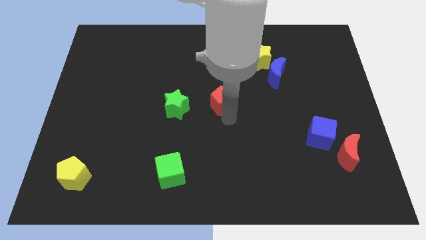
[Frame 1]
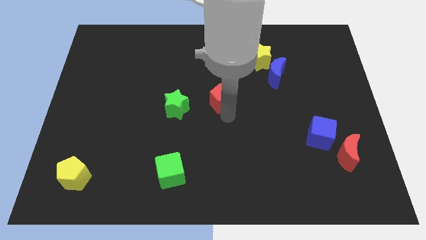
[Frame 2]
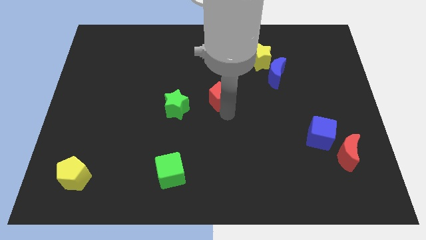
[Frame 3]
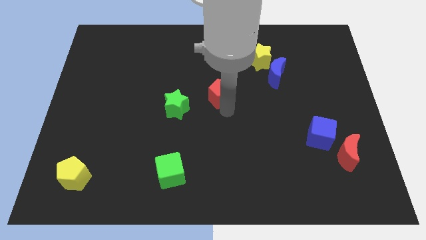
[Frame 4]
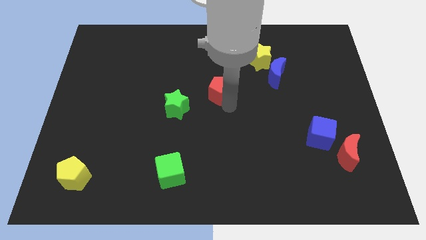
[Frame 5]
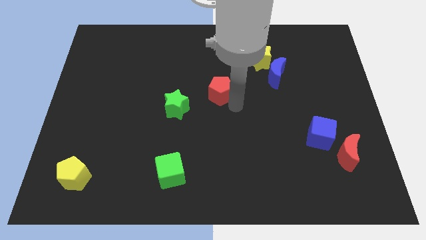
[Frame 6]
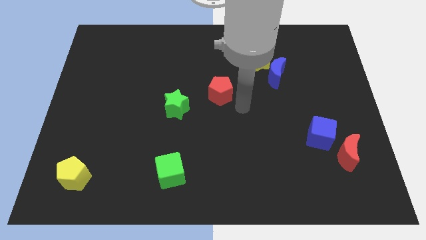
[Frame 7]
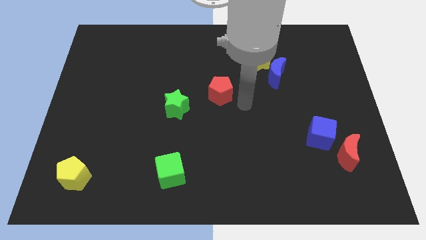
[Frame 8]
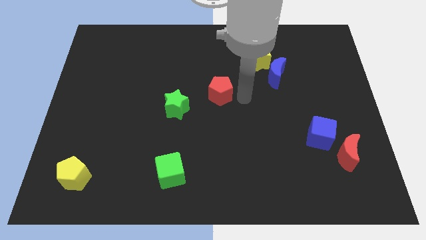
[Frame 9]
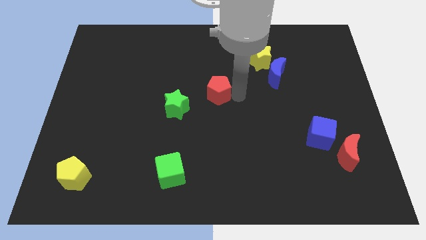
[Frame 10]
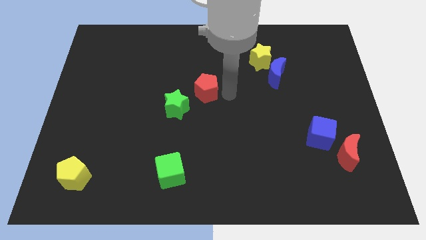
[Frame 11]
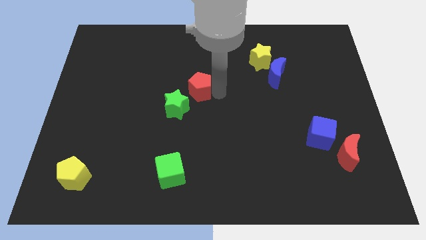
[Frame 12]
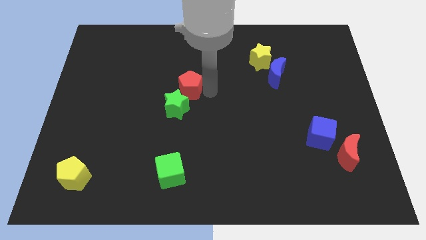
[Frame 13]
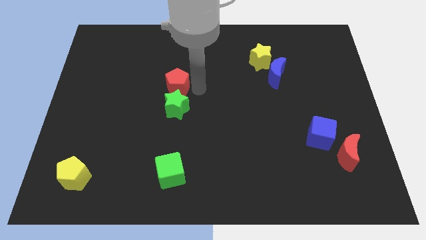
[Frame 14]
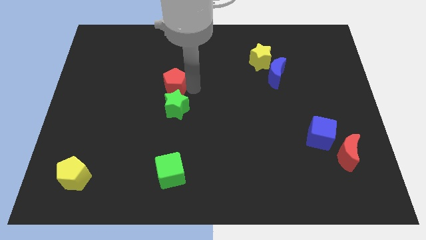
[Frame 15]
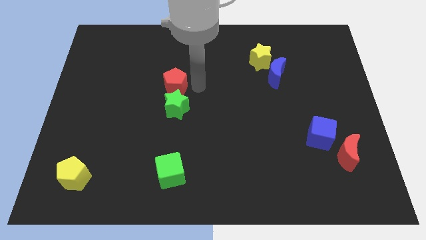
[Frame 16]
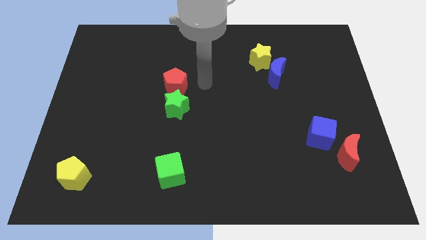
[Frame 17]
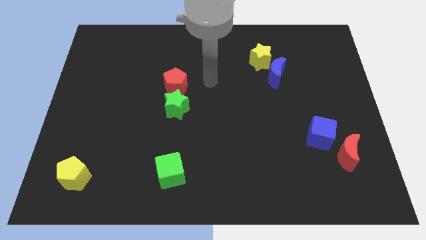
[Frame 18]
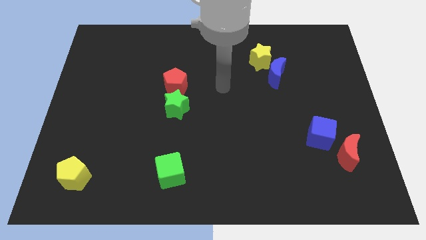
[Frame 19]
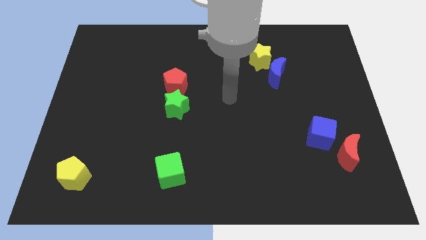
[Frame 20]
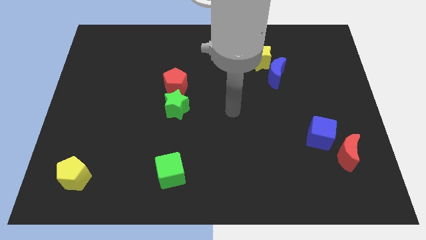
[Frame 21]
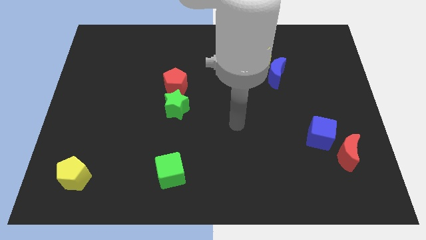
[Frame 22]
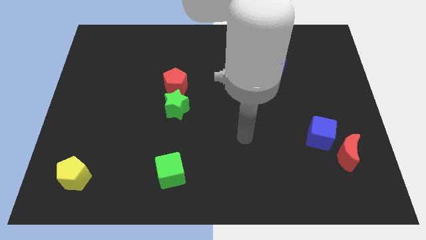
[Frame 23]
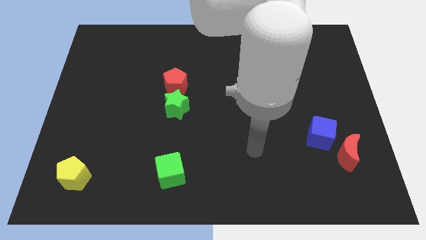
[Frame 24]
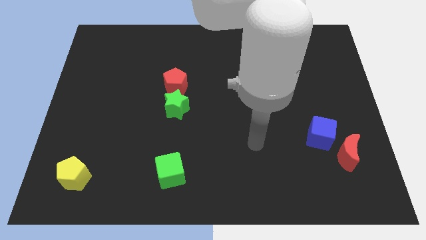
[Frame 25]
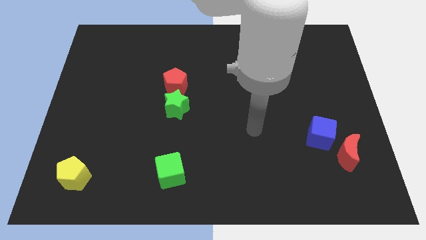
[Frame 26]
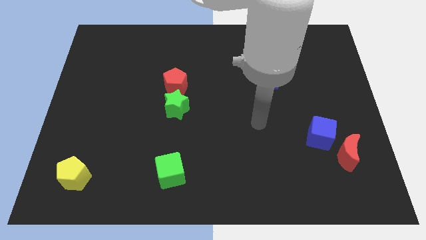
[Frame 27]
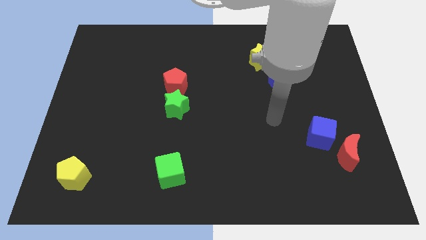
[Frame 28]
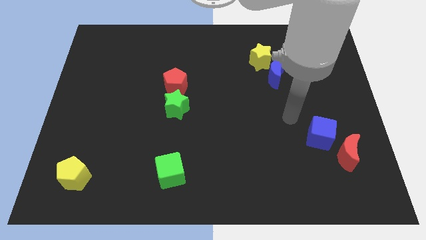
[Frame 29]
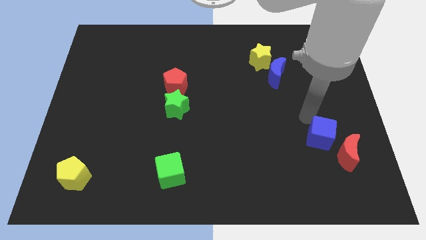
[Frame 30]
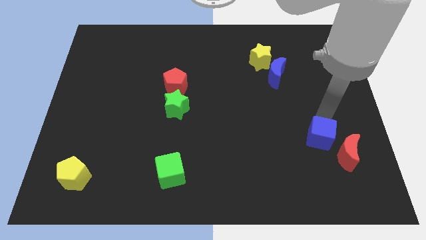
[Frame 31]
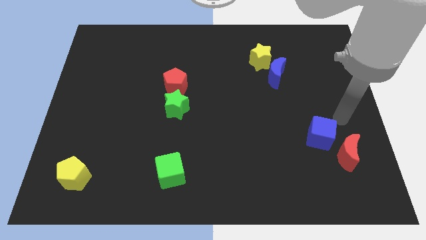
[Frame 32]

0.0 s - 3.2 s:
place the red pentagon on top of the green star

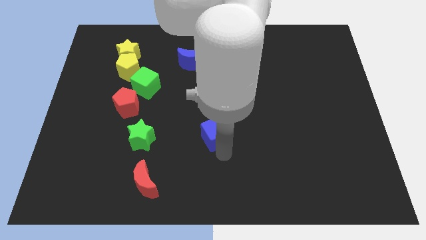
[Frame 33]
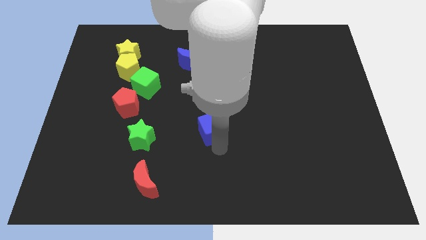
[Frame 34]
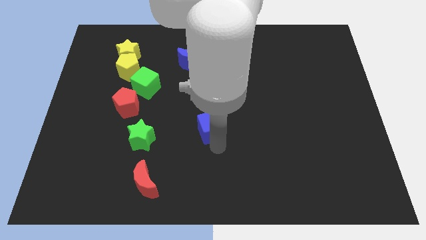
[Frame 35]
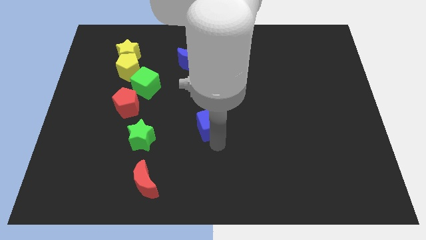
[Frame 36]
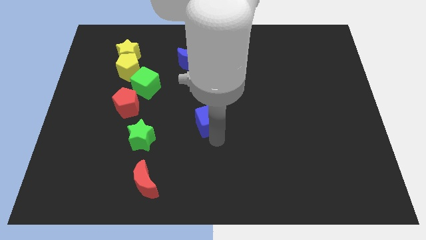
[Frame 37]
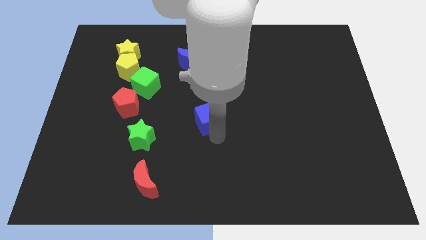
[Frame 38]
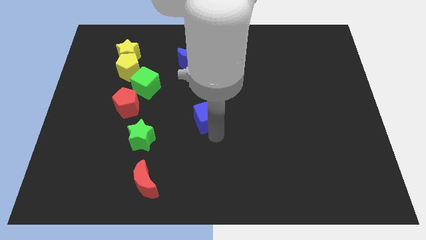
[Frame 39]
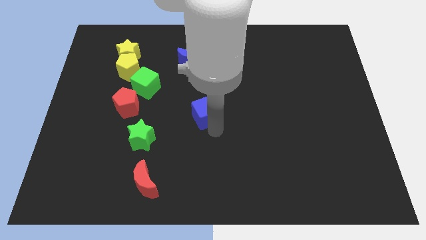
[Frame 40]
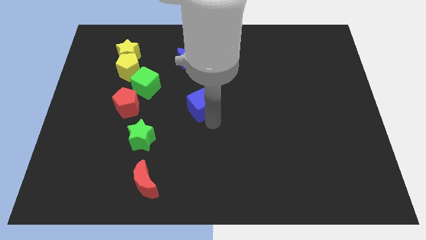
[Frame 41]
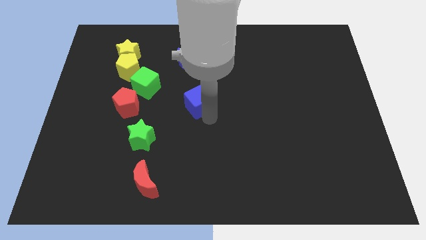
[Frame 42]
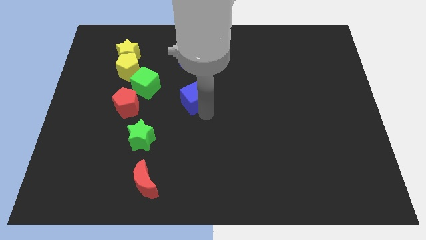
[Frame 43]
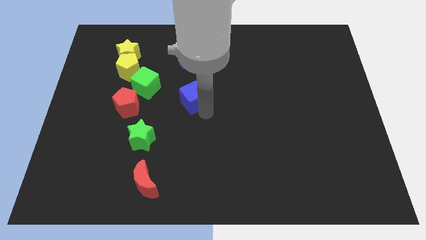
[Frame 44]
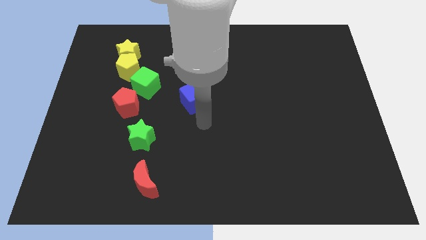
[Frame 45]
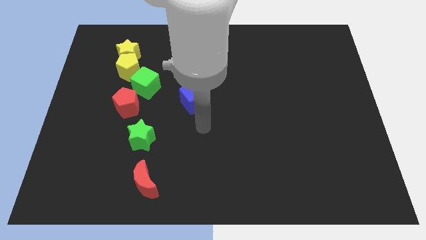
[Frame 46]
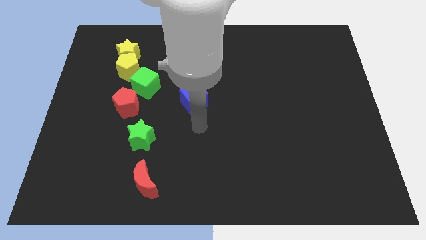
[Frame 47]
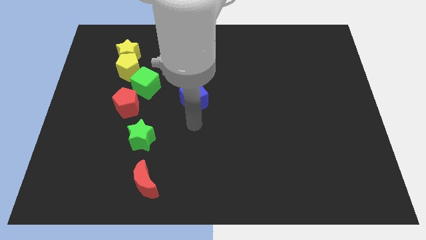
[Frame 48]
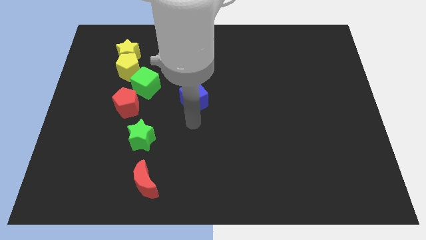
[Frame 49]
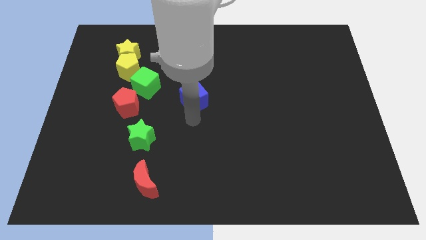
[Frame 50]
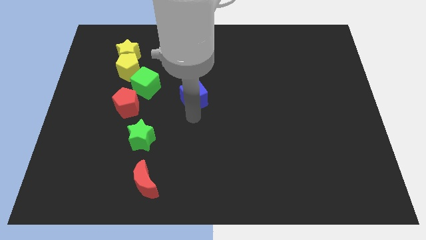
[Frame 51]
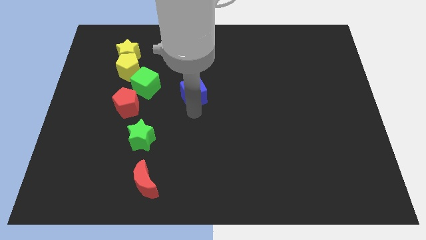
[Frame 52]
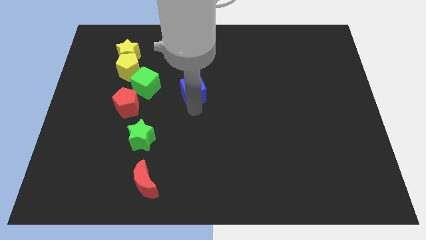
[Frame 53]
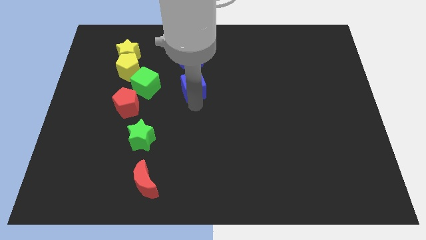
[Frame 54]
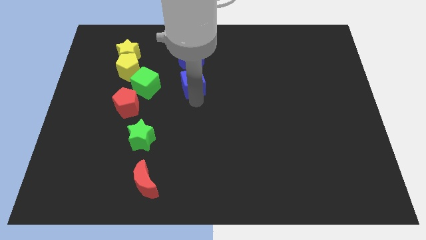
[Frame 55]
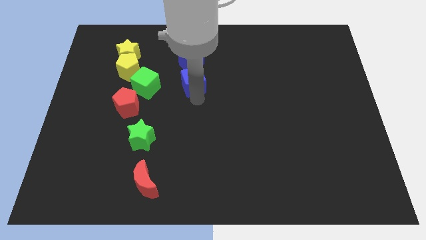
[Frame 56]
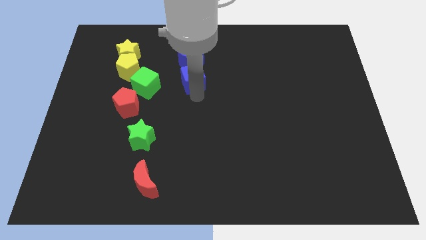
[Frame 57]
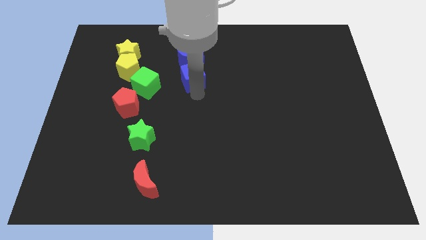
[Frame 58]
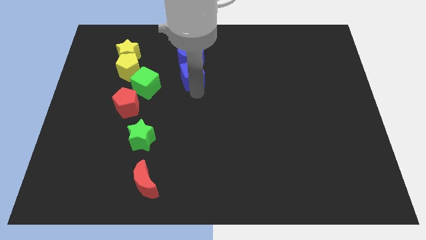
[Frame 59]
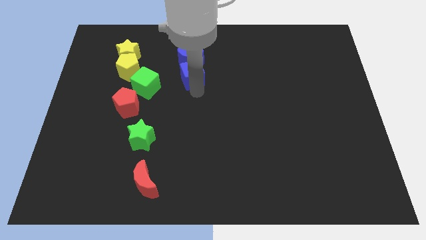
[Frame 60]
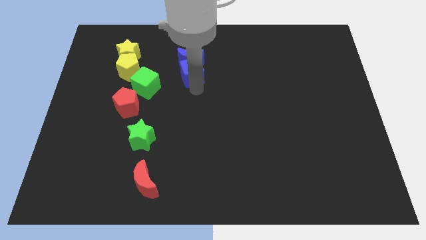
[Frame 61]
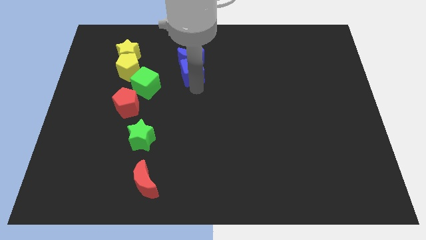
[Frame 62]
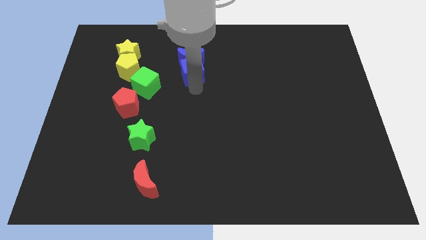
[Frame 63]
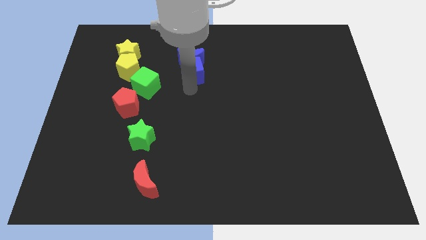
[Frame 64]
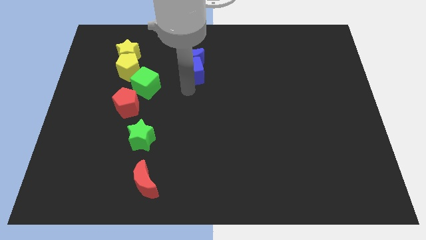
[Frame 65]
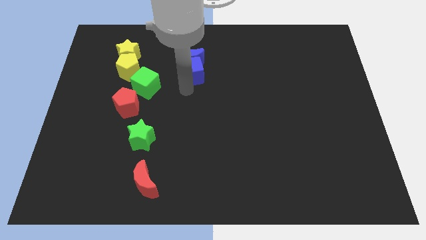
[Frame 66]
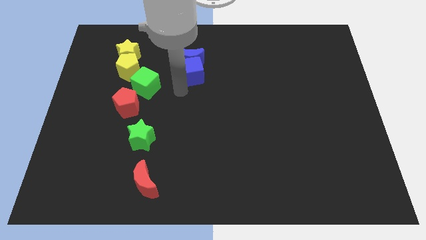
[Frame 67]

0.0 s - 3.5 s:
move the blue cube into the blue crescent

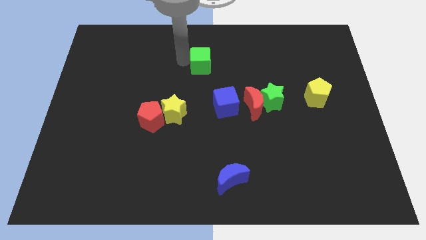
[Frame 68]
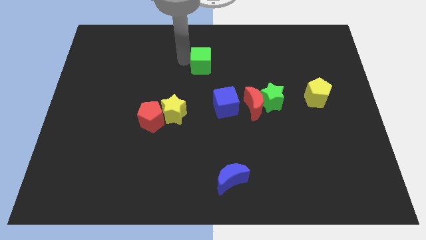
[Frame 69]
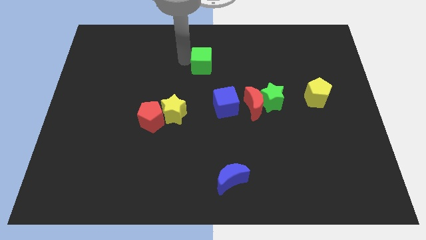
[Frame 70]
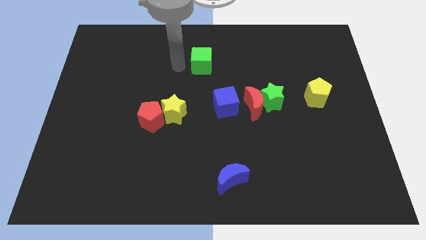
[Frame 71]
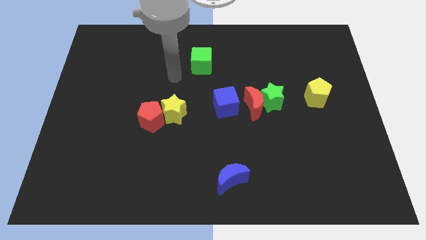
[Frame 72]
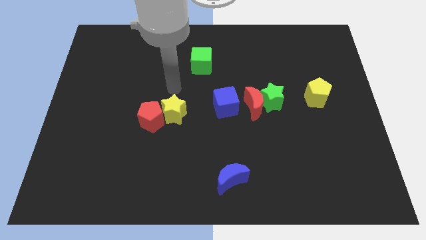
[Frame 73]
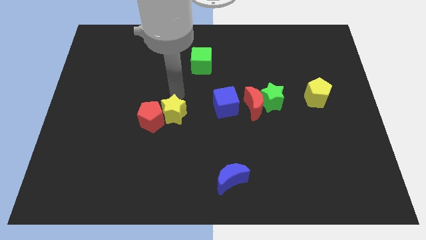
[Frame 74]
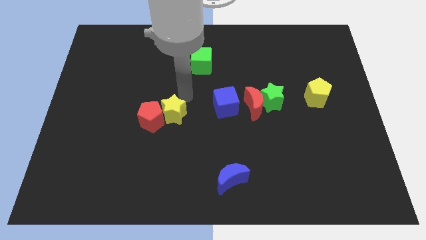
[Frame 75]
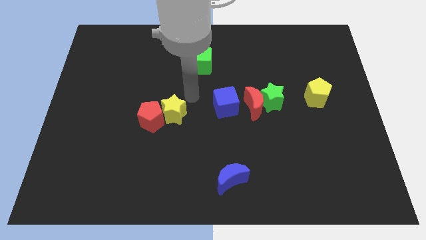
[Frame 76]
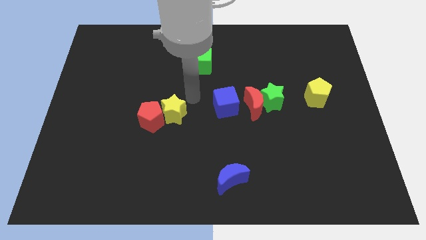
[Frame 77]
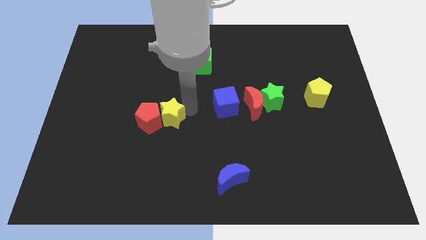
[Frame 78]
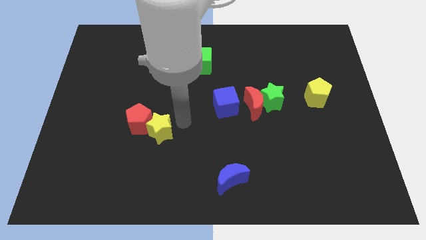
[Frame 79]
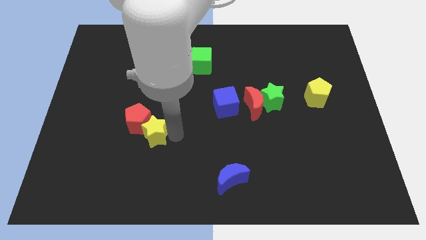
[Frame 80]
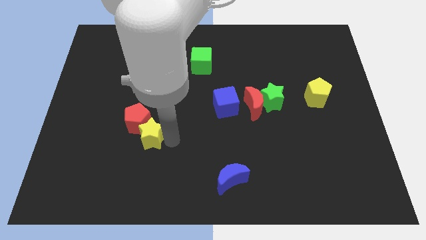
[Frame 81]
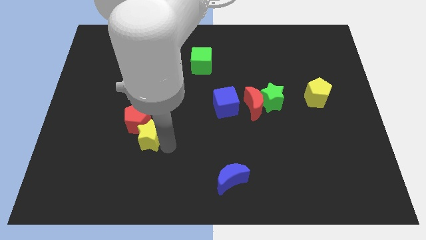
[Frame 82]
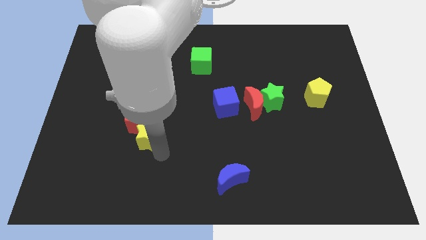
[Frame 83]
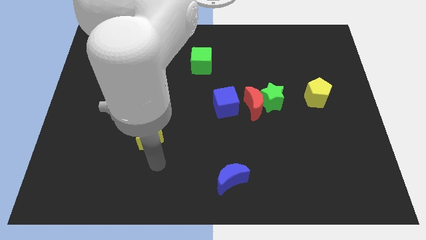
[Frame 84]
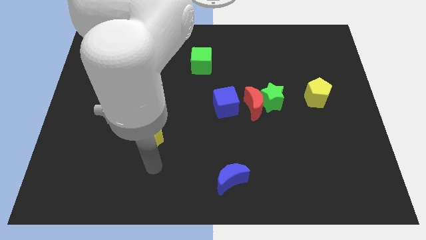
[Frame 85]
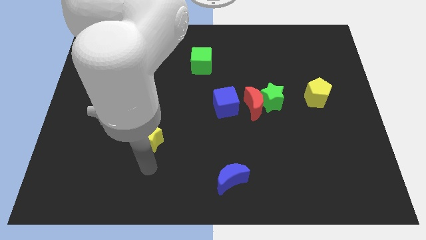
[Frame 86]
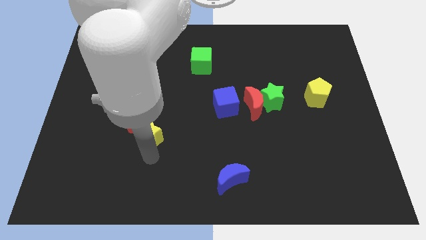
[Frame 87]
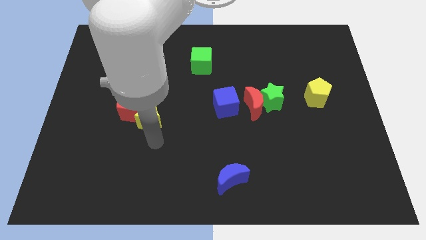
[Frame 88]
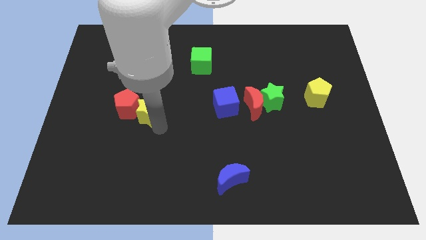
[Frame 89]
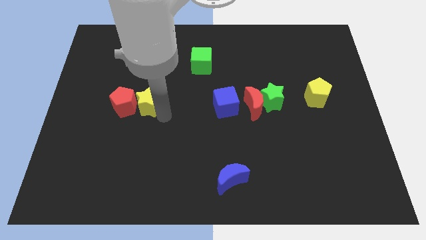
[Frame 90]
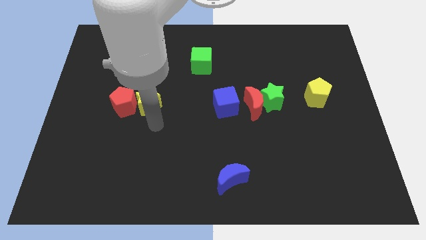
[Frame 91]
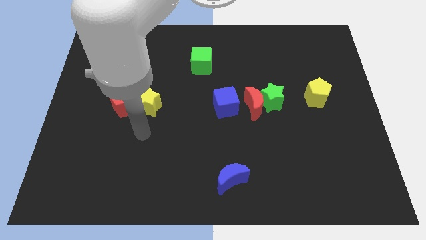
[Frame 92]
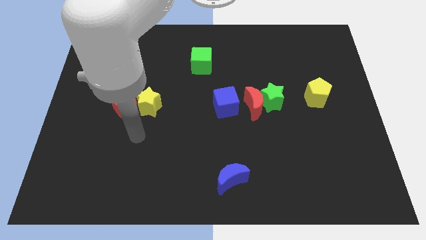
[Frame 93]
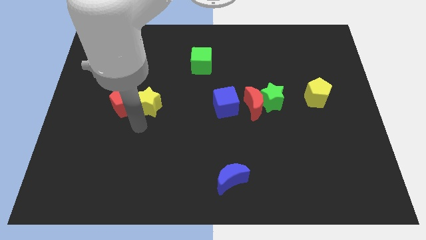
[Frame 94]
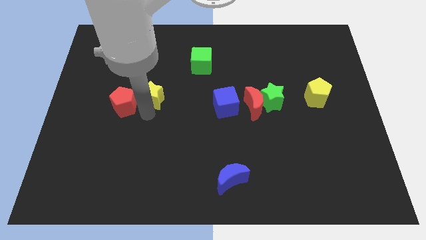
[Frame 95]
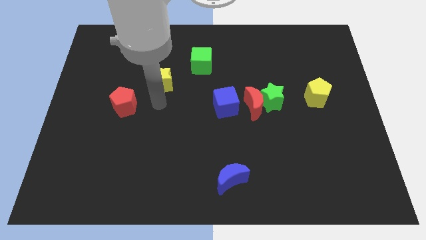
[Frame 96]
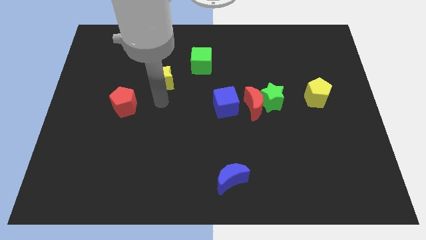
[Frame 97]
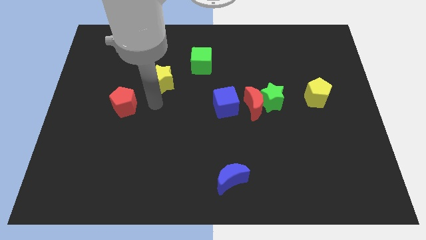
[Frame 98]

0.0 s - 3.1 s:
place the yellow star and red pentagon diagonally to the green cube
